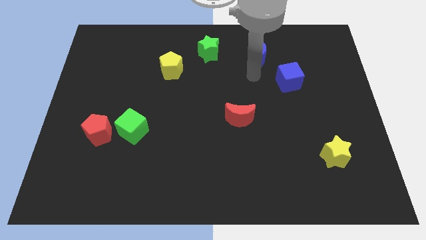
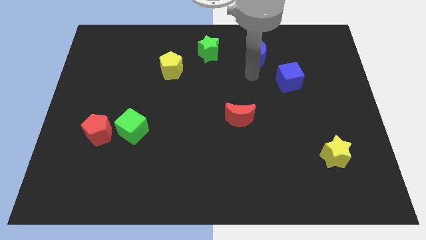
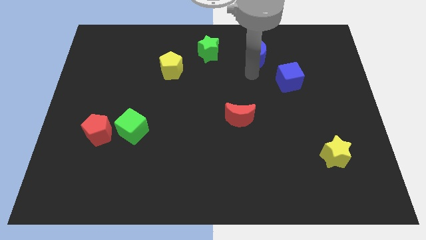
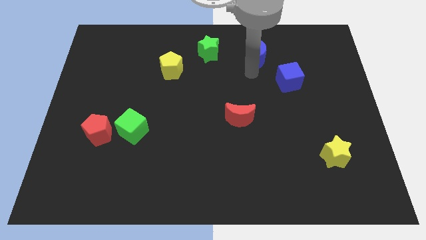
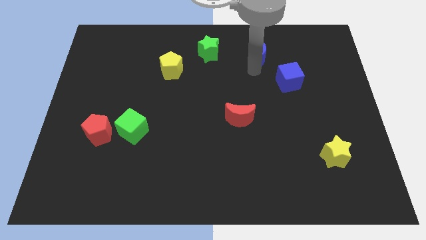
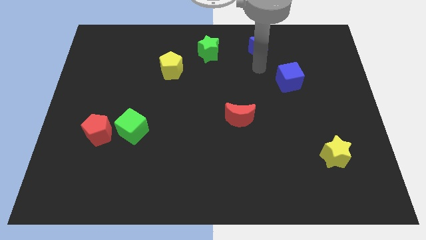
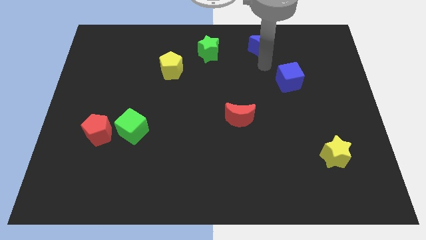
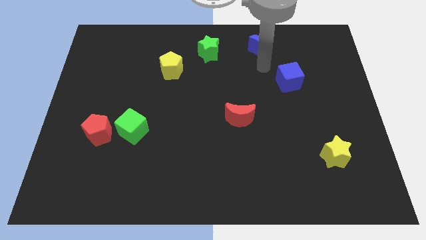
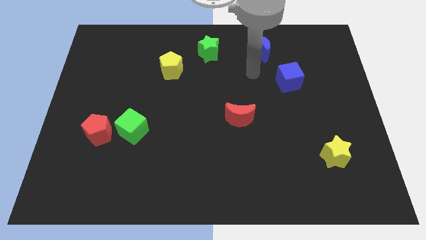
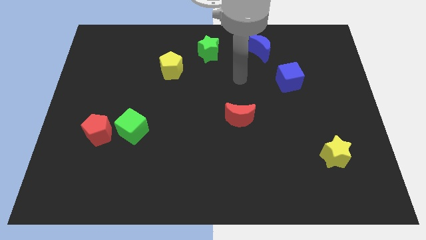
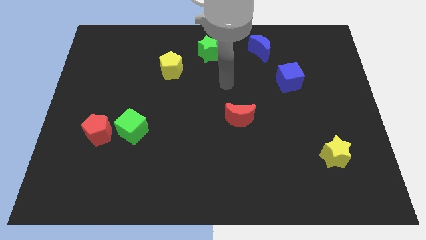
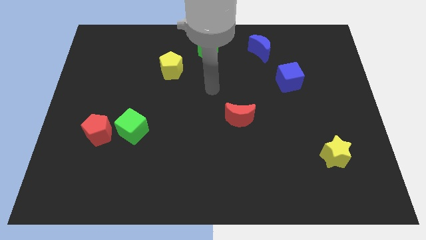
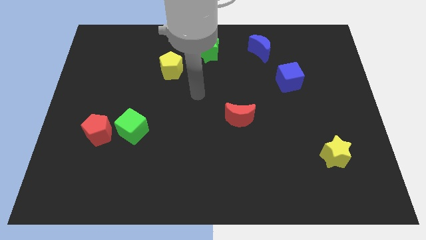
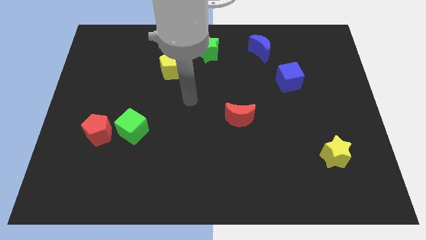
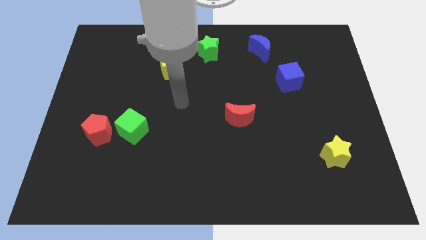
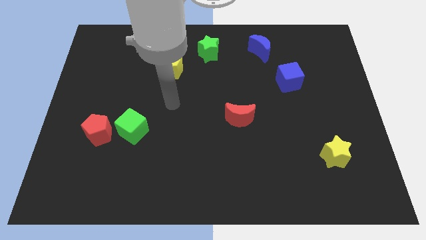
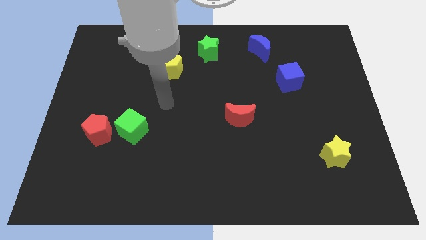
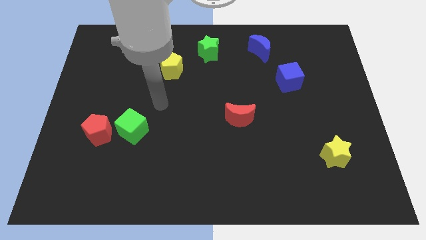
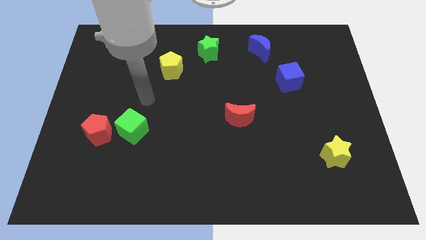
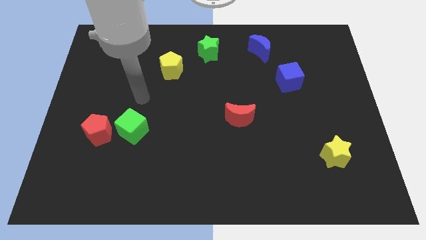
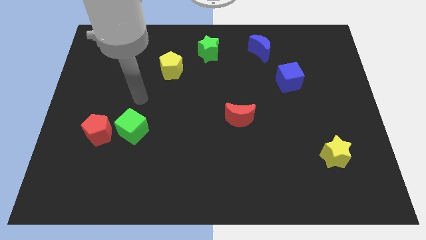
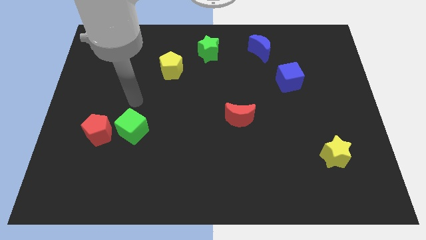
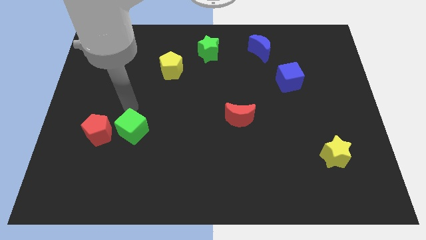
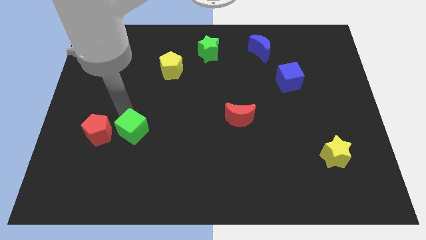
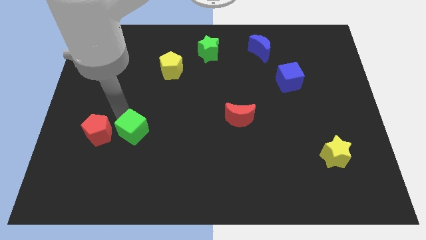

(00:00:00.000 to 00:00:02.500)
touch the top side of the green cube

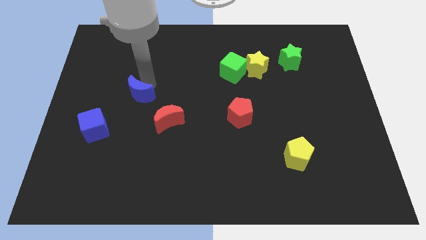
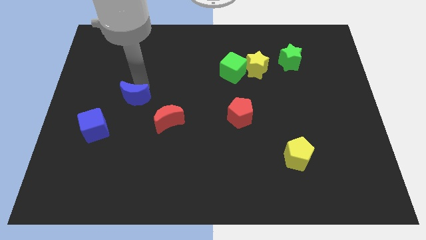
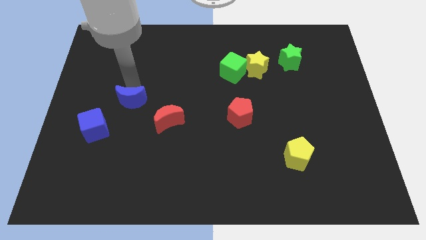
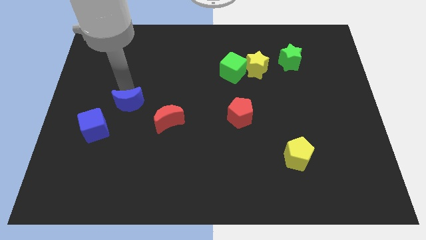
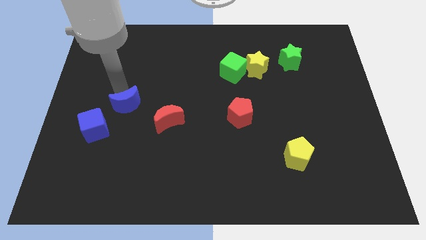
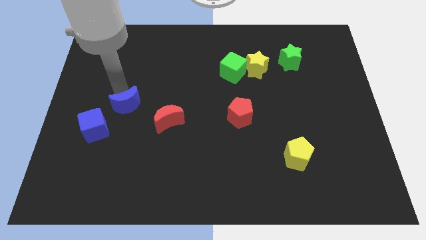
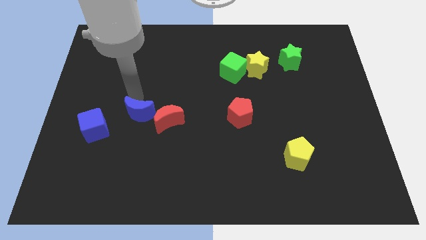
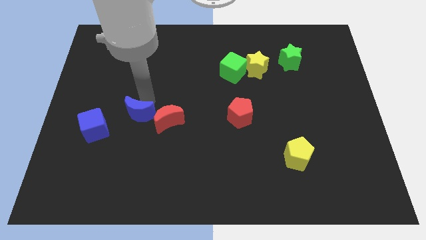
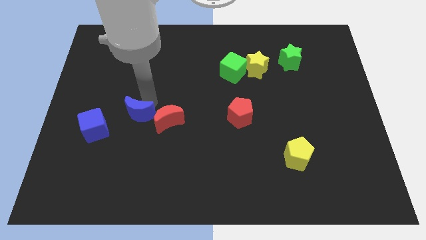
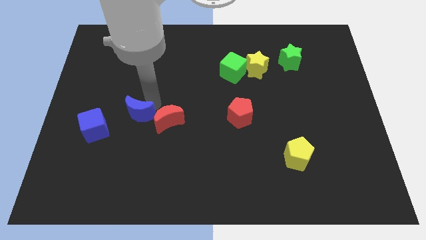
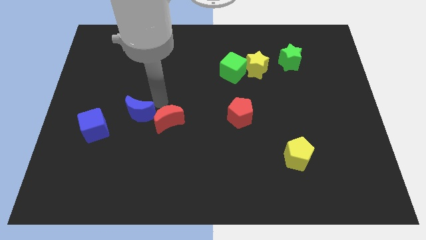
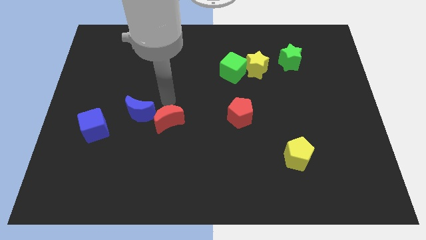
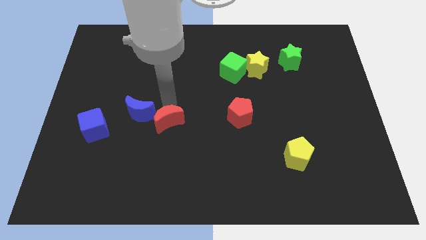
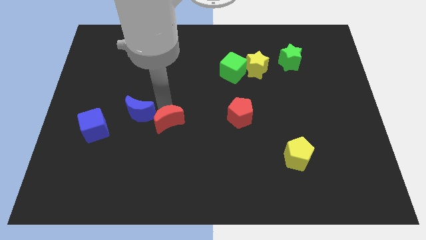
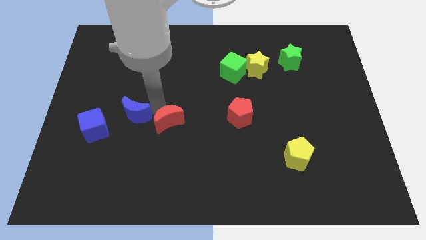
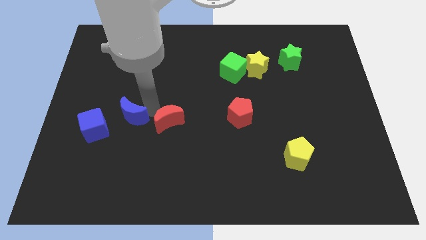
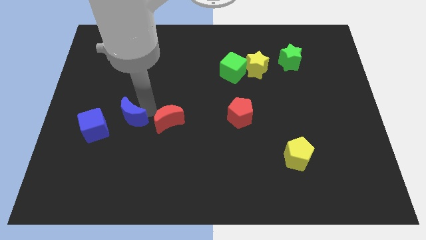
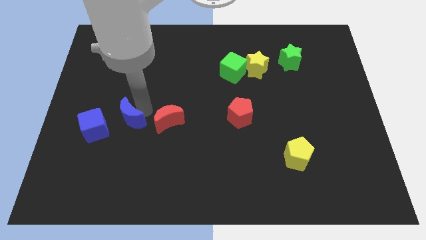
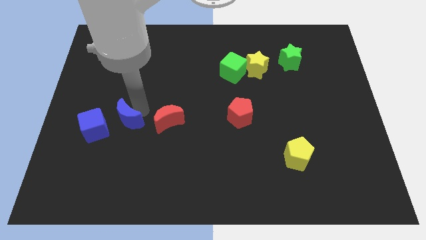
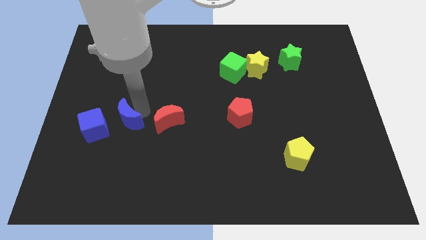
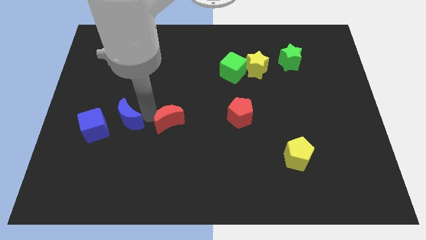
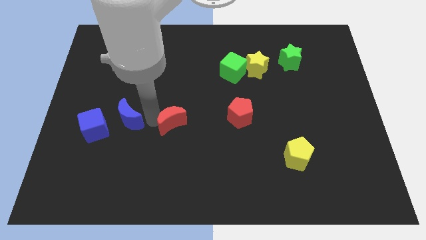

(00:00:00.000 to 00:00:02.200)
place the blue crescent in between the blue cube and red moon

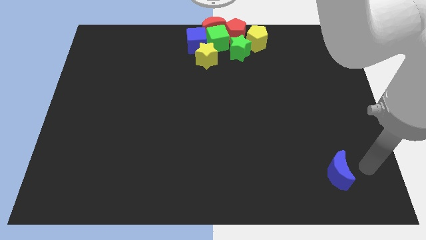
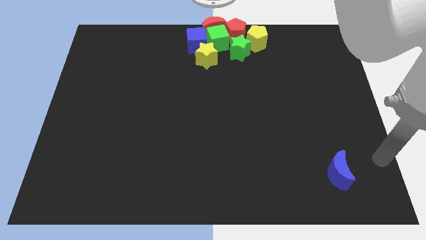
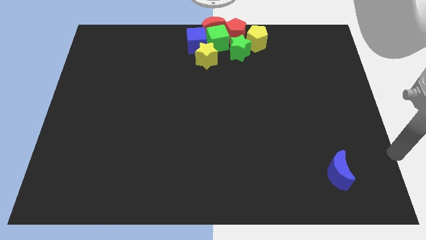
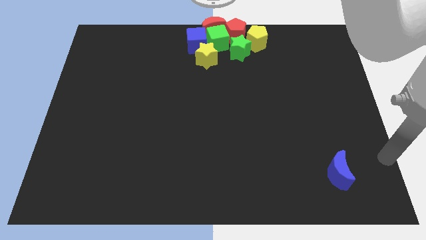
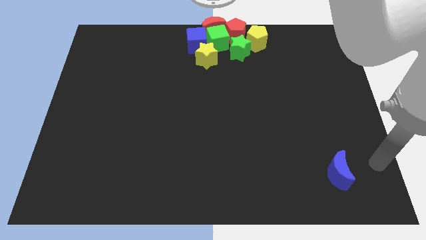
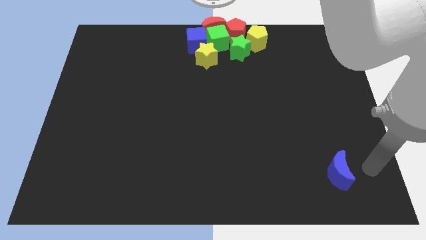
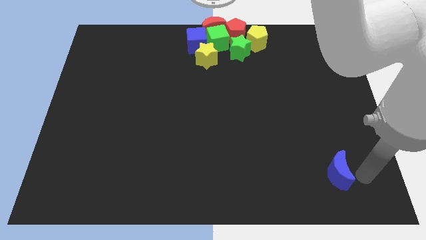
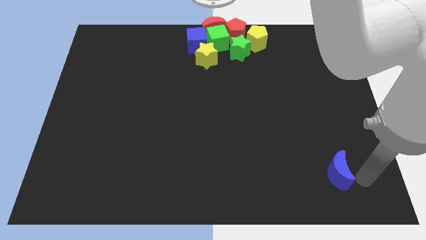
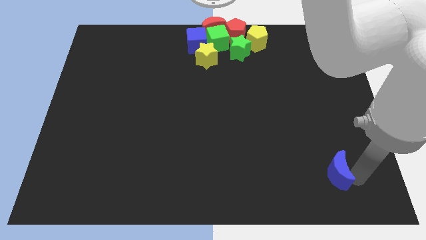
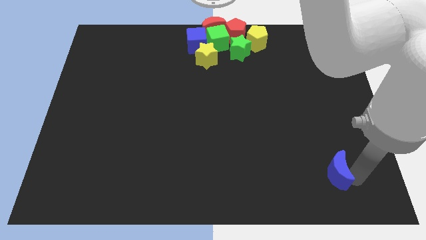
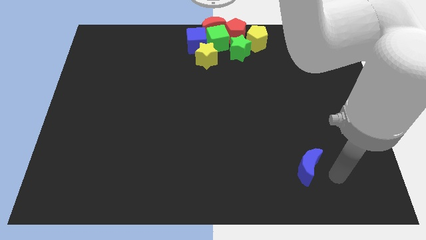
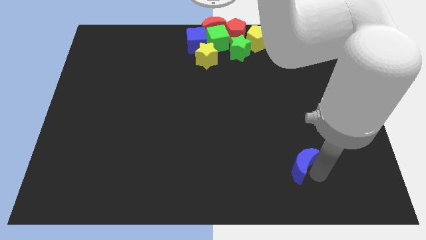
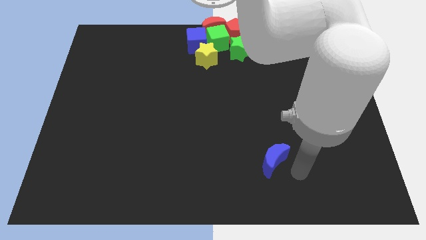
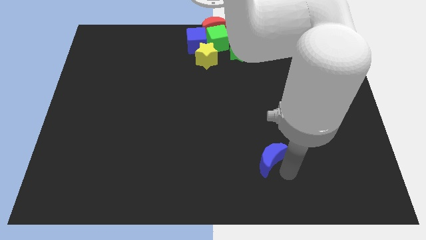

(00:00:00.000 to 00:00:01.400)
move the blue crescent to the left of the board

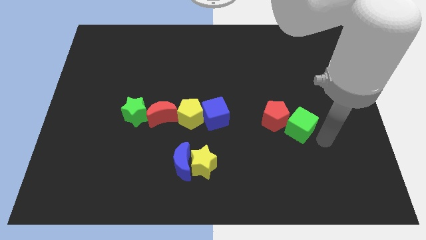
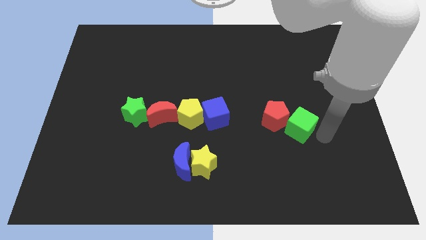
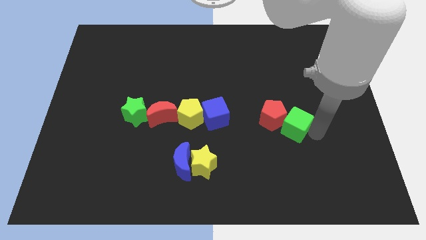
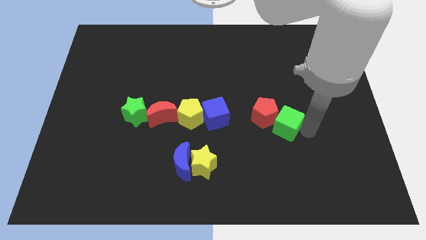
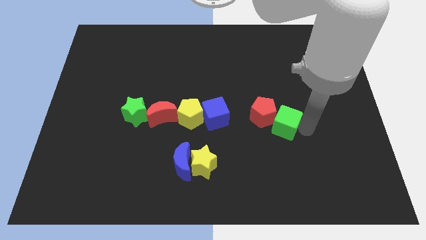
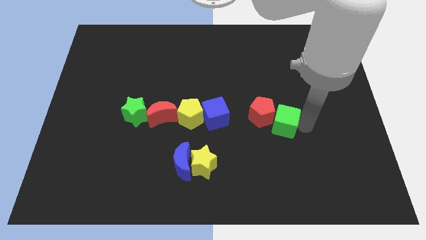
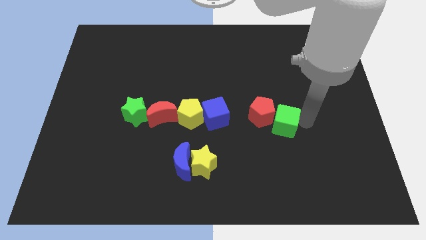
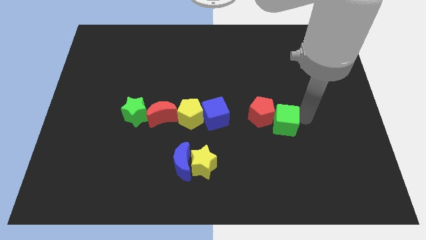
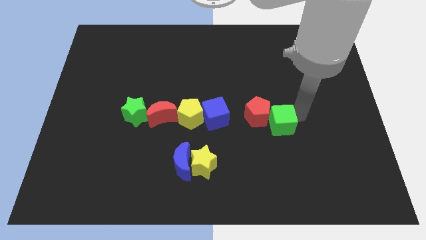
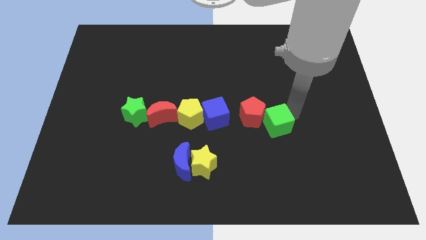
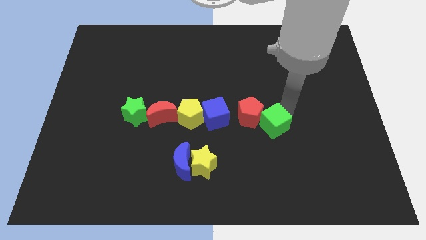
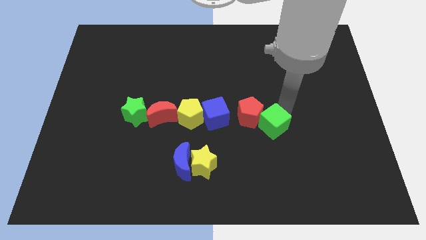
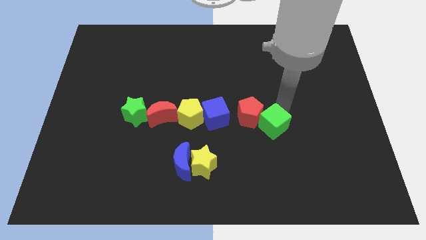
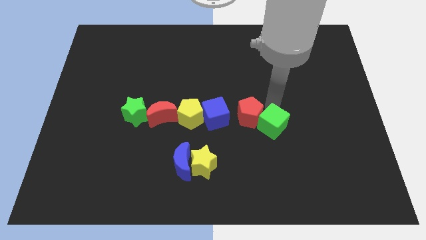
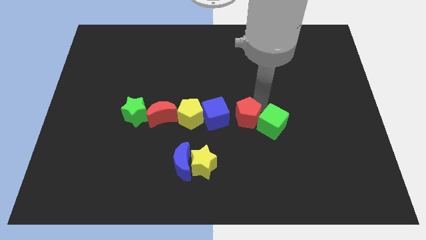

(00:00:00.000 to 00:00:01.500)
move the green cube to the right of the board

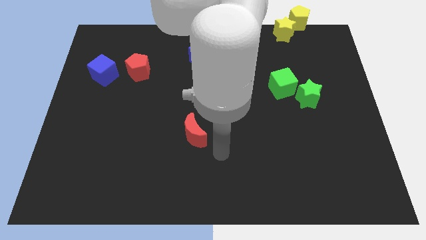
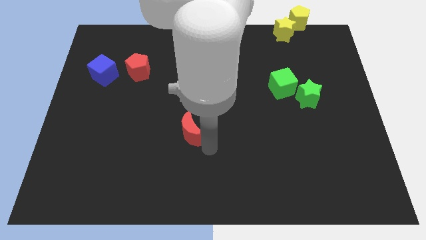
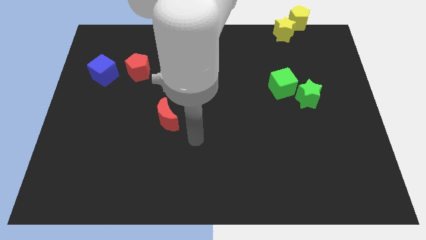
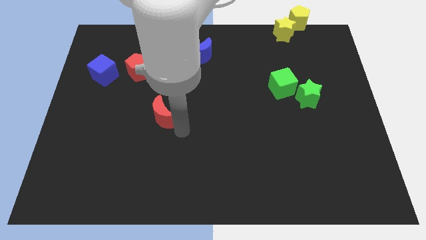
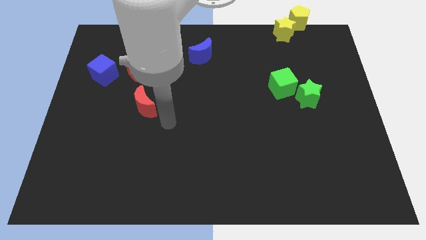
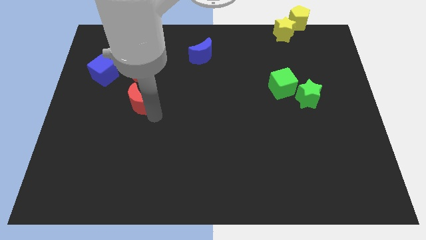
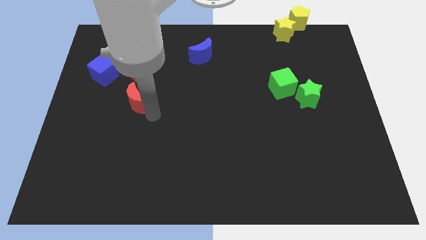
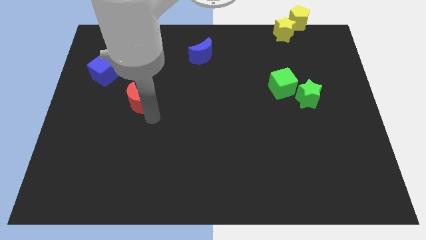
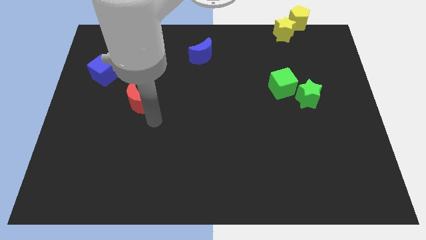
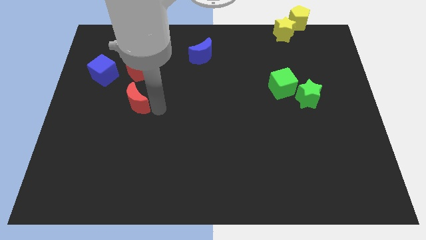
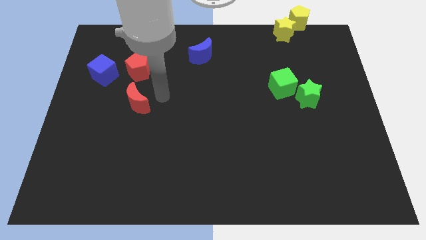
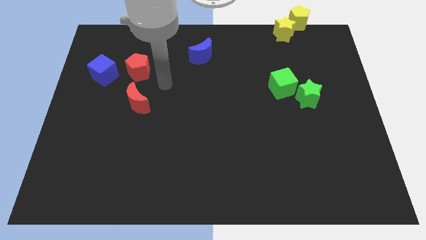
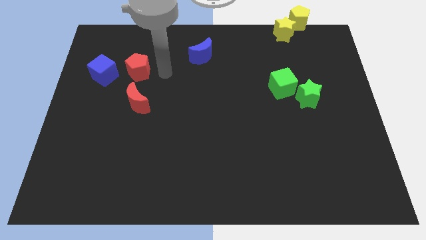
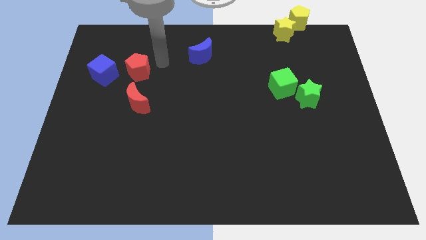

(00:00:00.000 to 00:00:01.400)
move the red crescent to the bottom of red pentagon
